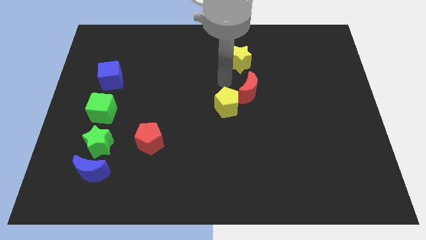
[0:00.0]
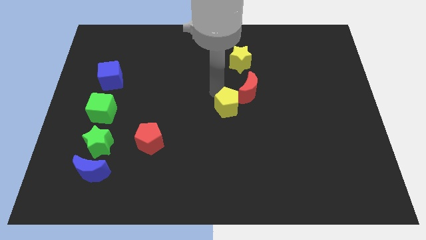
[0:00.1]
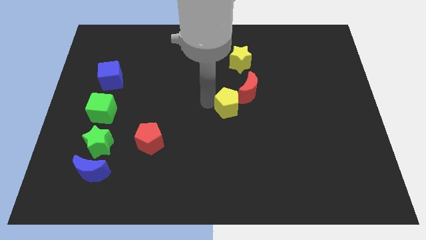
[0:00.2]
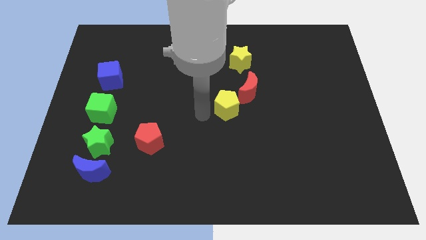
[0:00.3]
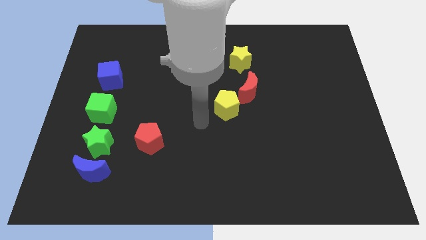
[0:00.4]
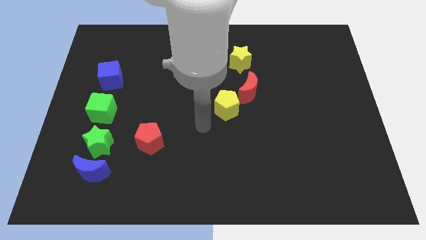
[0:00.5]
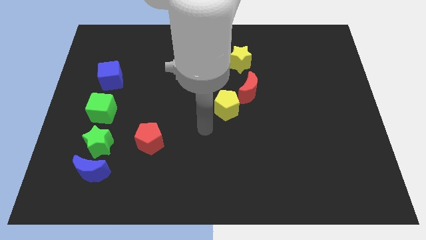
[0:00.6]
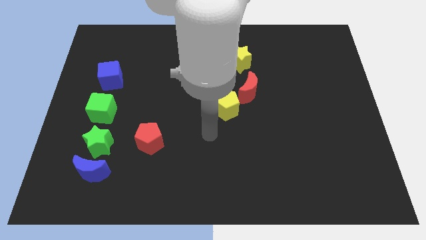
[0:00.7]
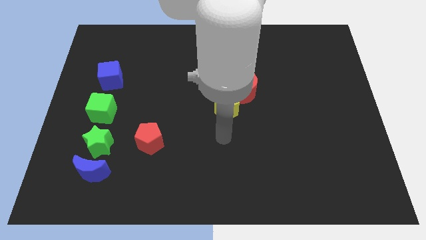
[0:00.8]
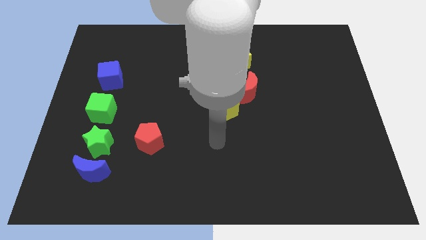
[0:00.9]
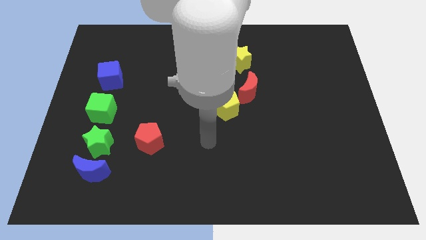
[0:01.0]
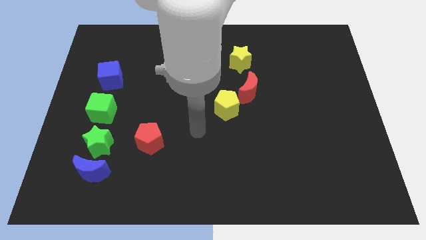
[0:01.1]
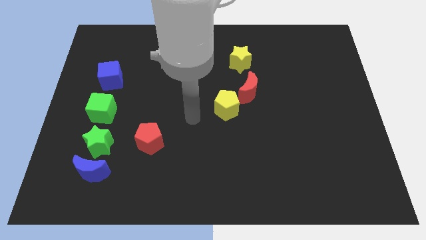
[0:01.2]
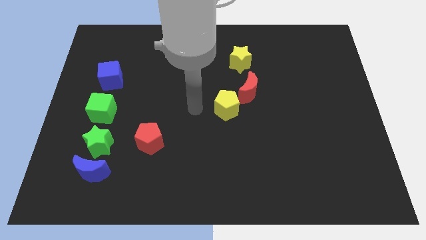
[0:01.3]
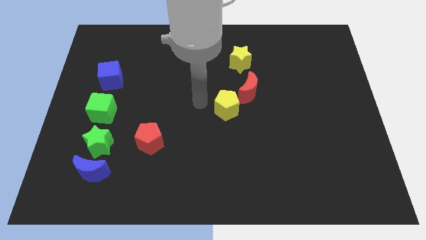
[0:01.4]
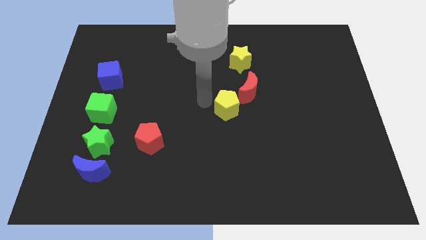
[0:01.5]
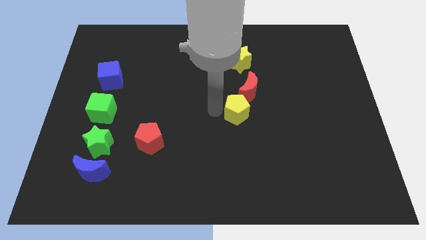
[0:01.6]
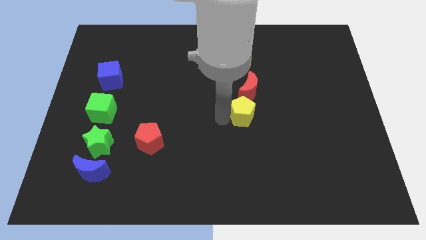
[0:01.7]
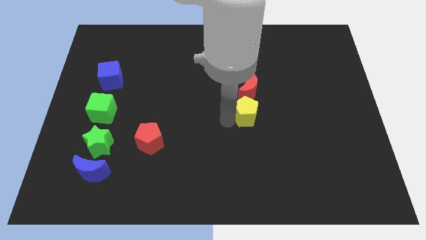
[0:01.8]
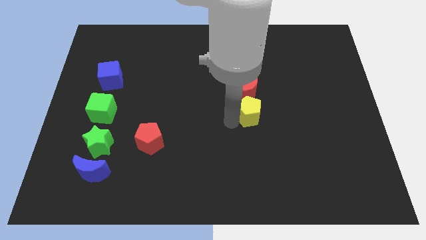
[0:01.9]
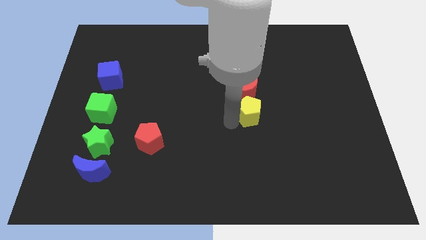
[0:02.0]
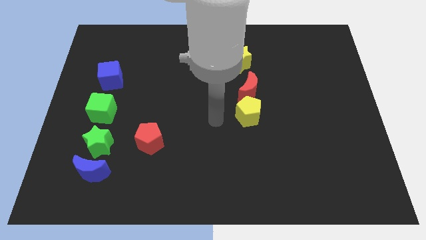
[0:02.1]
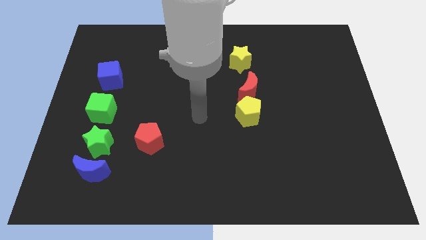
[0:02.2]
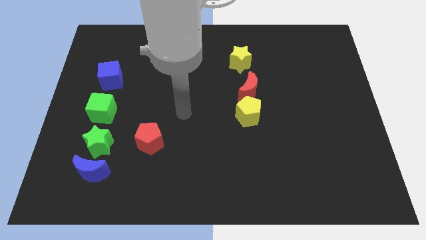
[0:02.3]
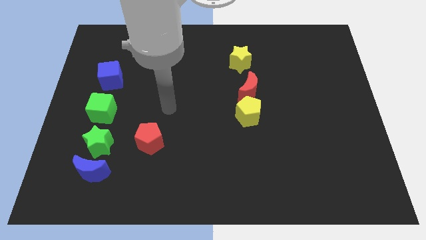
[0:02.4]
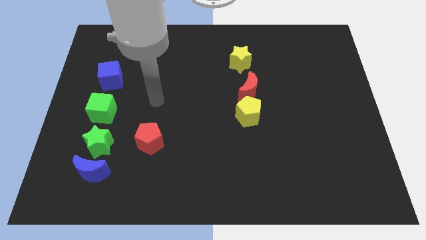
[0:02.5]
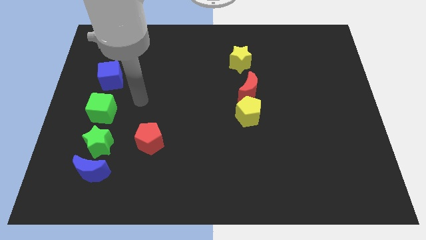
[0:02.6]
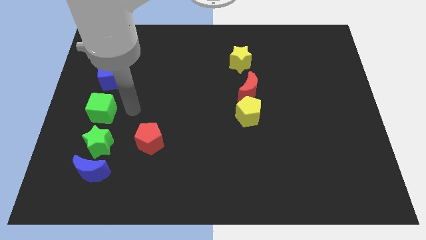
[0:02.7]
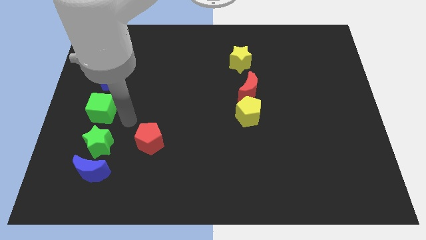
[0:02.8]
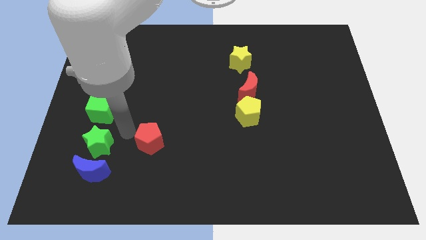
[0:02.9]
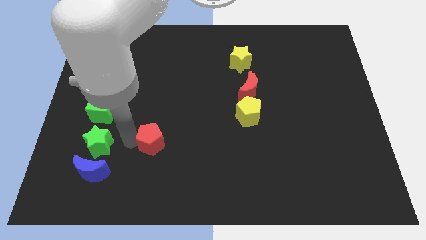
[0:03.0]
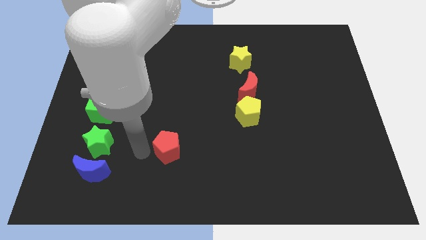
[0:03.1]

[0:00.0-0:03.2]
place yellow pentagon below the red crescent

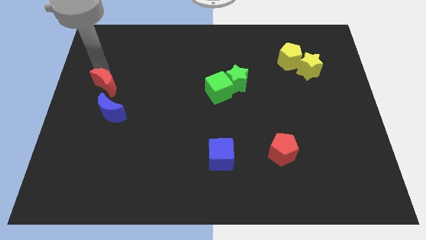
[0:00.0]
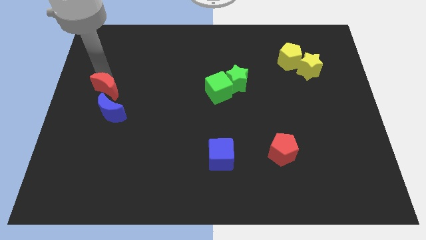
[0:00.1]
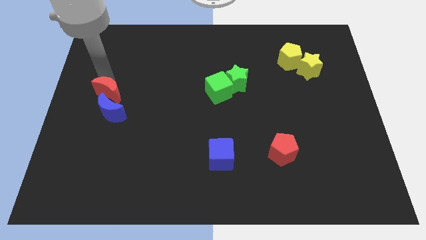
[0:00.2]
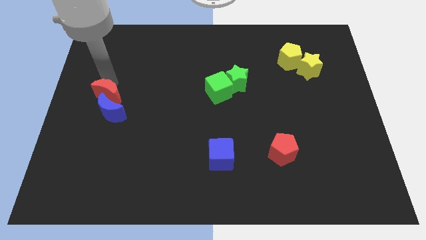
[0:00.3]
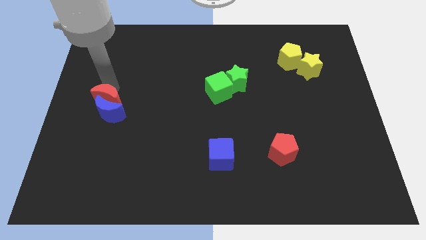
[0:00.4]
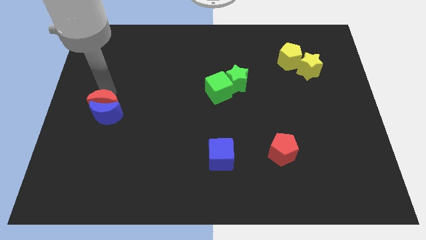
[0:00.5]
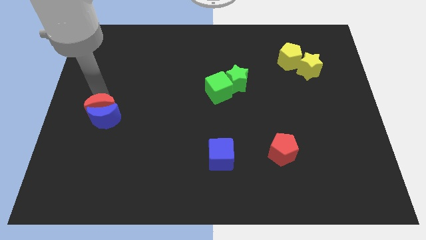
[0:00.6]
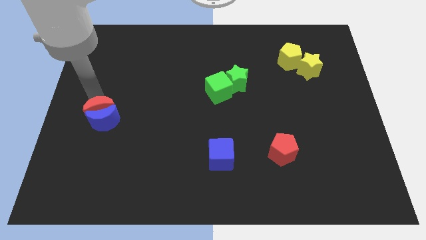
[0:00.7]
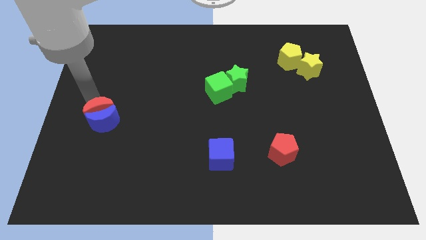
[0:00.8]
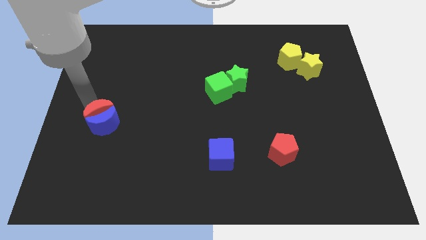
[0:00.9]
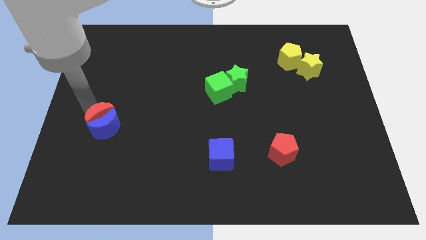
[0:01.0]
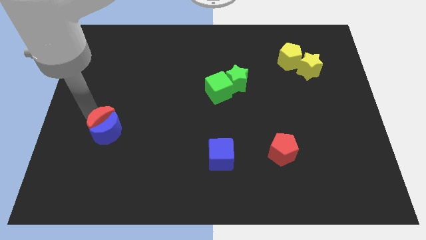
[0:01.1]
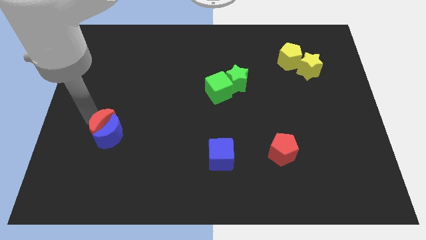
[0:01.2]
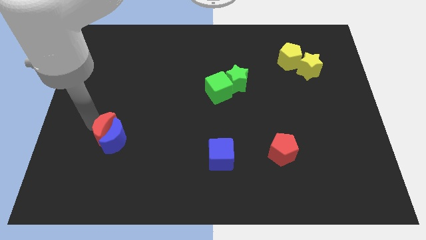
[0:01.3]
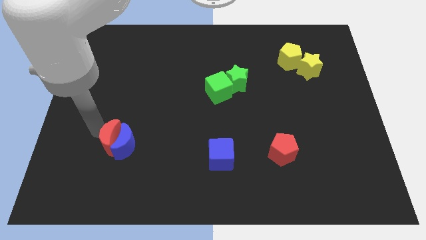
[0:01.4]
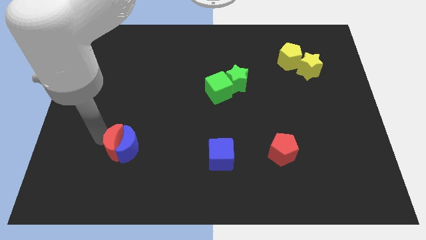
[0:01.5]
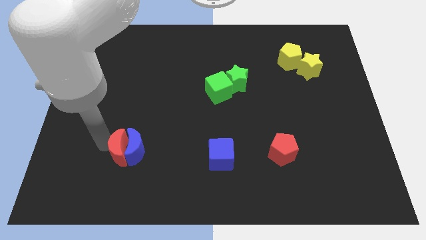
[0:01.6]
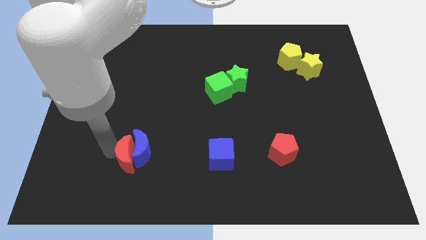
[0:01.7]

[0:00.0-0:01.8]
push the red and blue moons to the left of blue cube

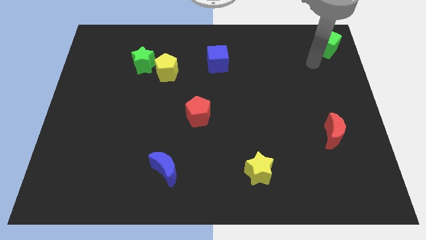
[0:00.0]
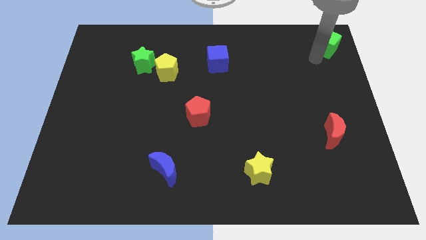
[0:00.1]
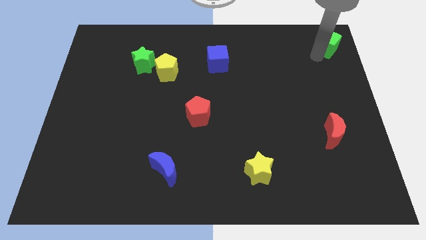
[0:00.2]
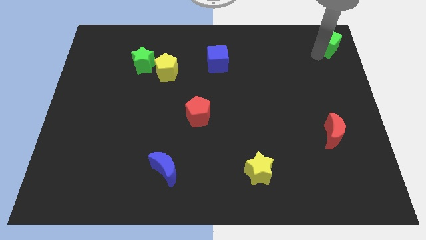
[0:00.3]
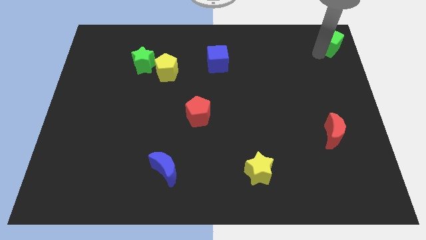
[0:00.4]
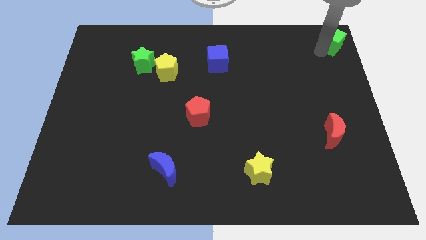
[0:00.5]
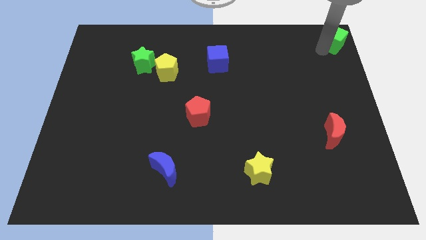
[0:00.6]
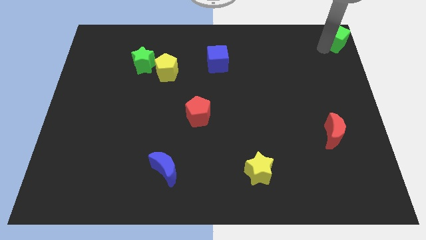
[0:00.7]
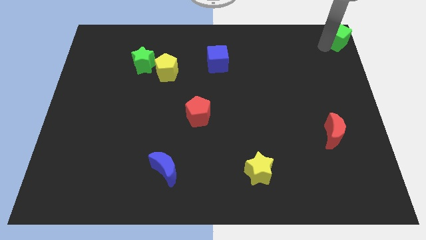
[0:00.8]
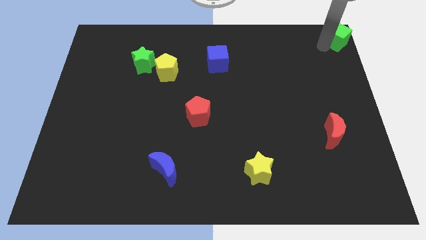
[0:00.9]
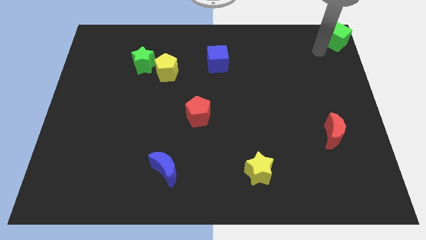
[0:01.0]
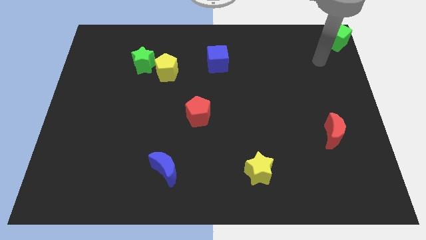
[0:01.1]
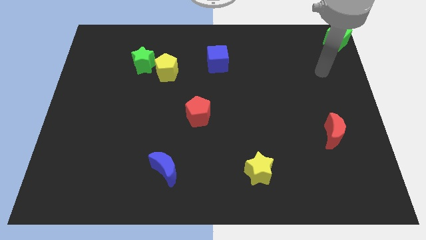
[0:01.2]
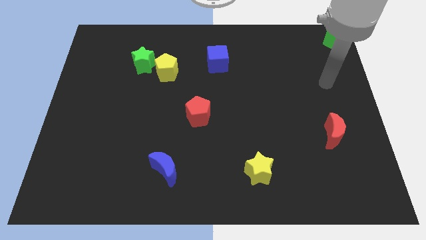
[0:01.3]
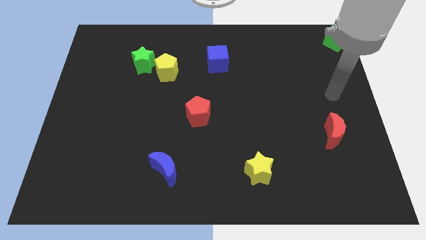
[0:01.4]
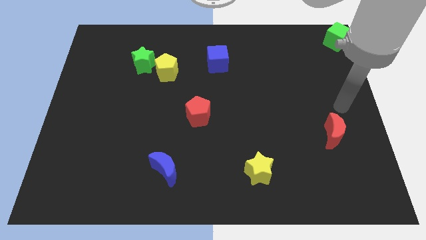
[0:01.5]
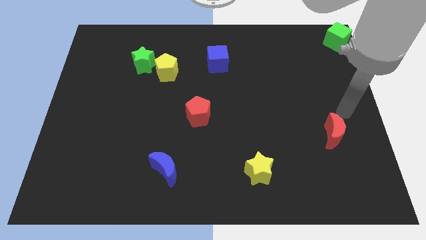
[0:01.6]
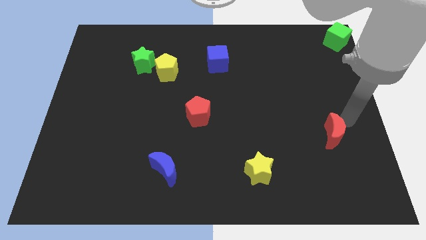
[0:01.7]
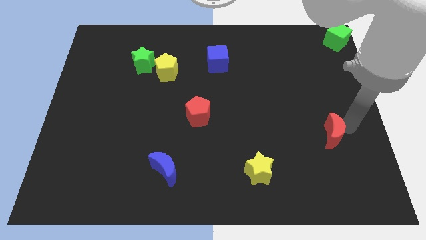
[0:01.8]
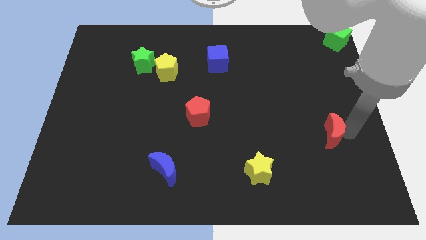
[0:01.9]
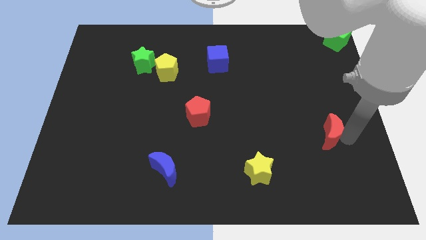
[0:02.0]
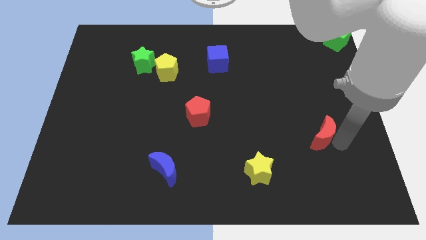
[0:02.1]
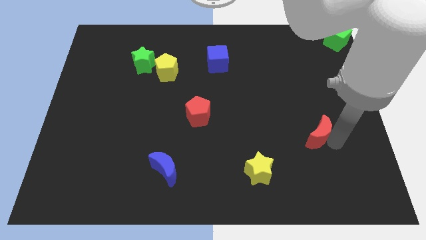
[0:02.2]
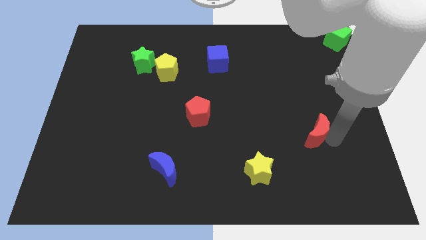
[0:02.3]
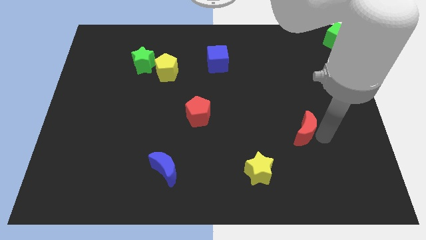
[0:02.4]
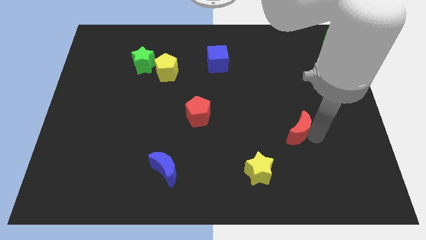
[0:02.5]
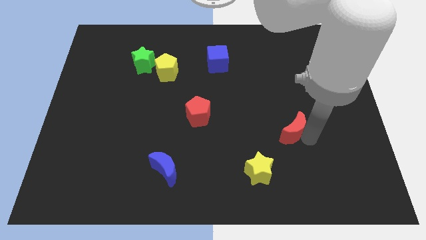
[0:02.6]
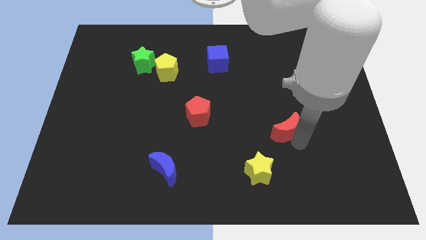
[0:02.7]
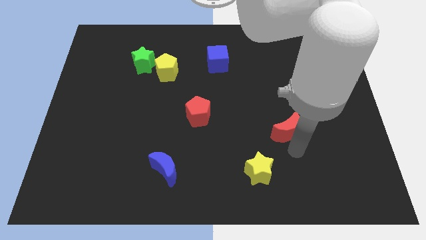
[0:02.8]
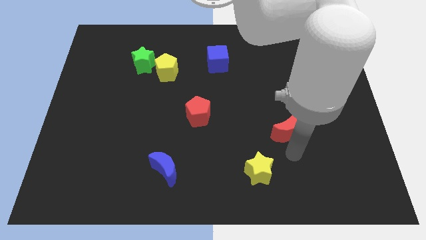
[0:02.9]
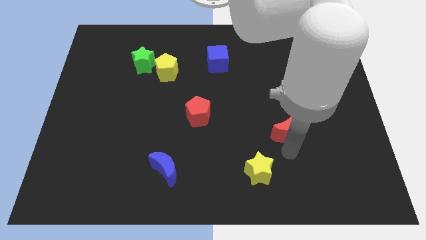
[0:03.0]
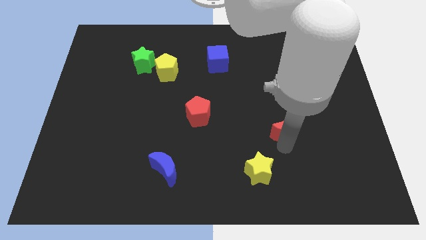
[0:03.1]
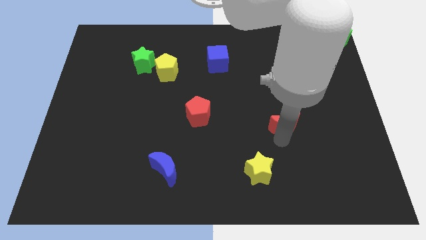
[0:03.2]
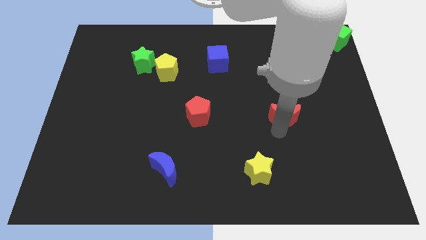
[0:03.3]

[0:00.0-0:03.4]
move the red moon parallel right to the red pentagon

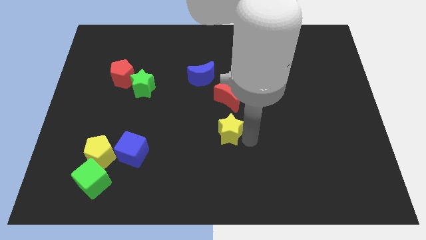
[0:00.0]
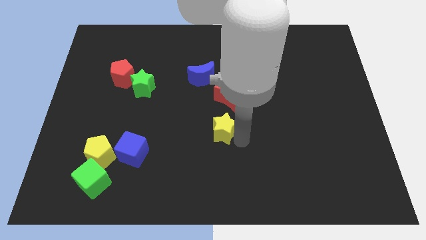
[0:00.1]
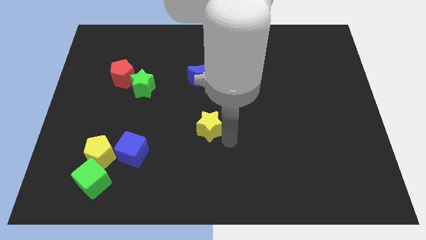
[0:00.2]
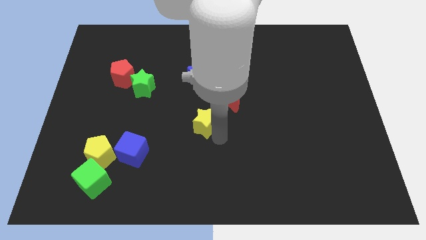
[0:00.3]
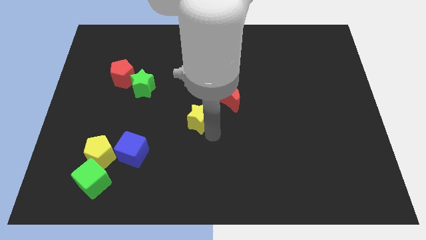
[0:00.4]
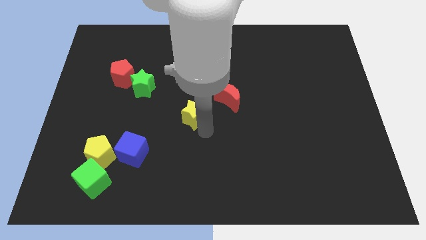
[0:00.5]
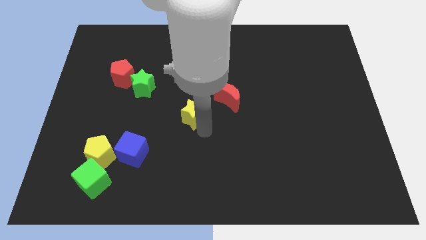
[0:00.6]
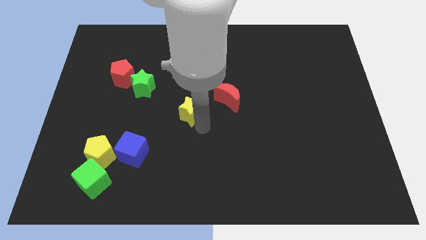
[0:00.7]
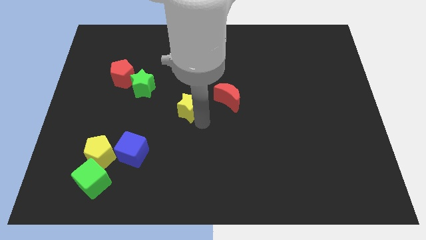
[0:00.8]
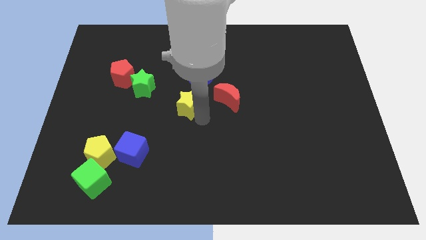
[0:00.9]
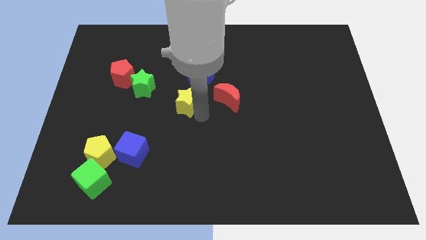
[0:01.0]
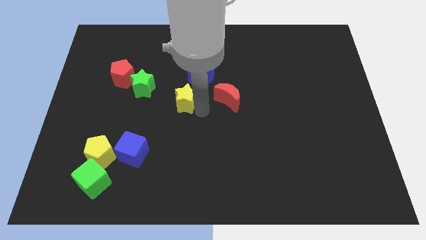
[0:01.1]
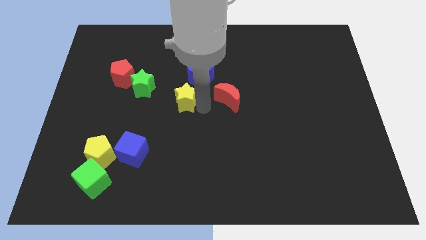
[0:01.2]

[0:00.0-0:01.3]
slide the yellow star parallel left to the red moon
